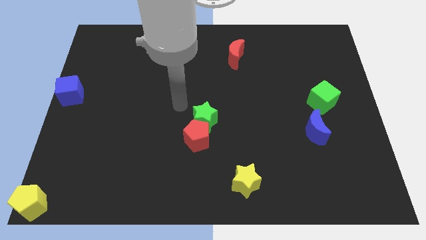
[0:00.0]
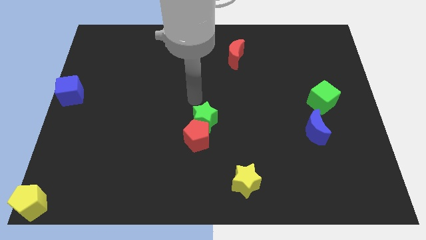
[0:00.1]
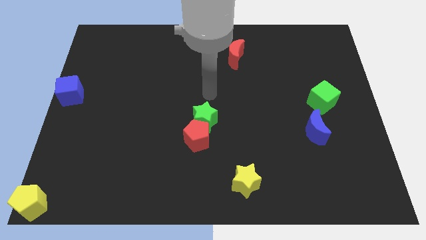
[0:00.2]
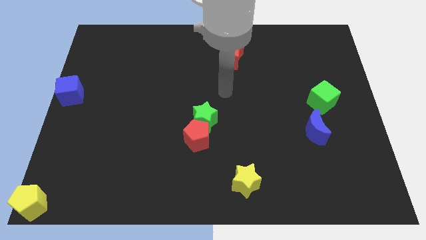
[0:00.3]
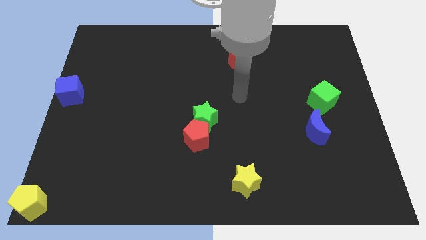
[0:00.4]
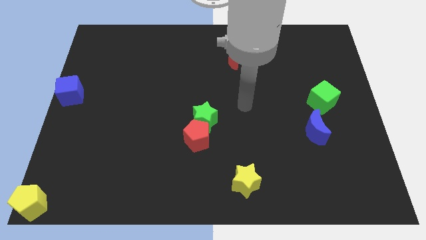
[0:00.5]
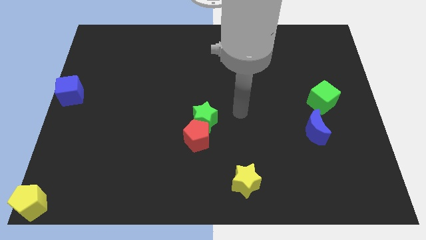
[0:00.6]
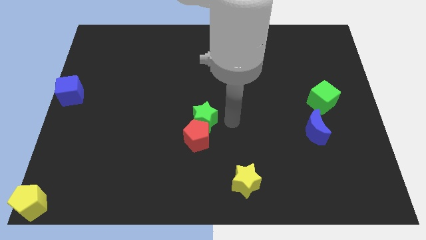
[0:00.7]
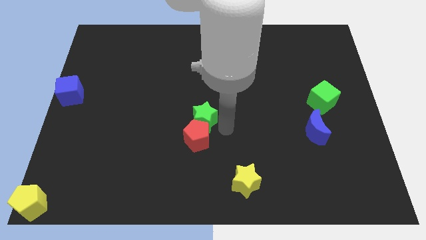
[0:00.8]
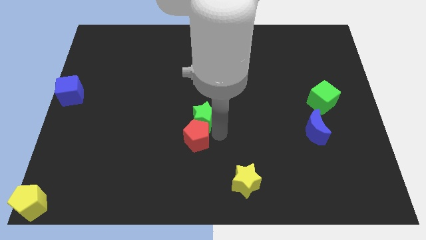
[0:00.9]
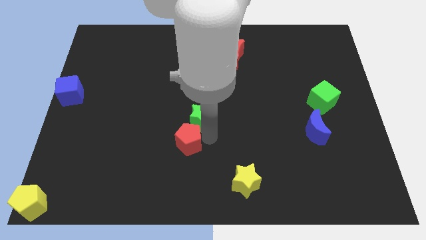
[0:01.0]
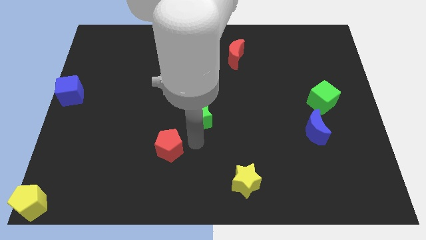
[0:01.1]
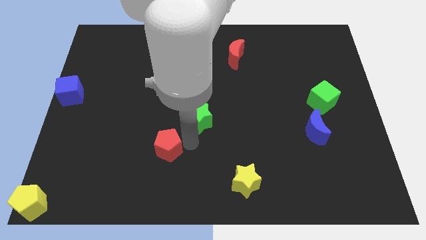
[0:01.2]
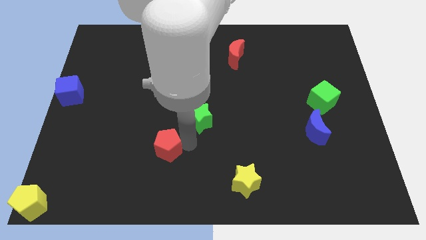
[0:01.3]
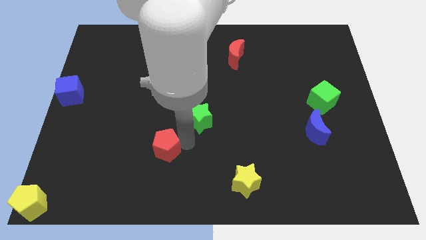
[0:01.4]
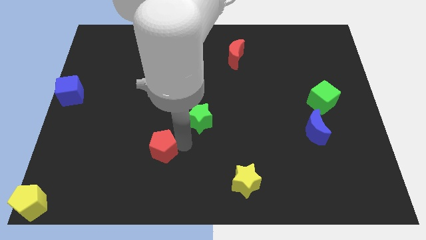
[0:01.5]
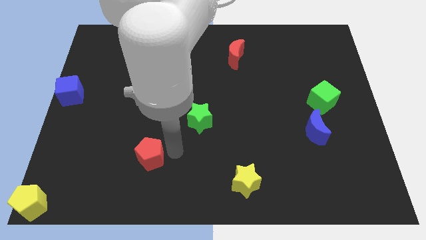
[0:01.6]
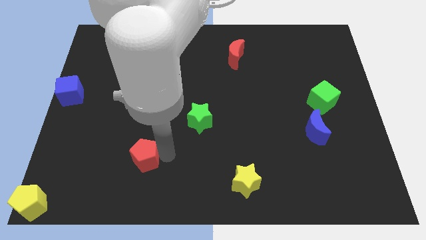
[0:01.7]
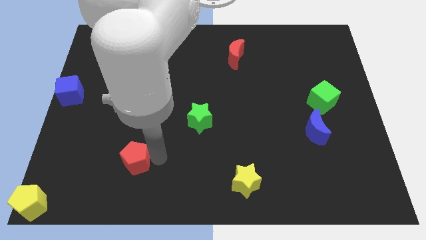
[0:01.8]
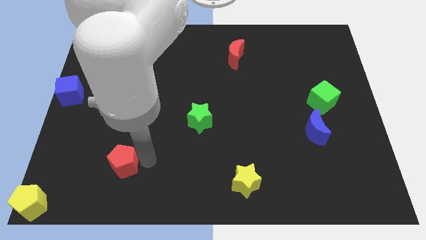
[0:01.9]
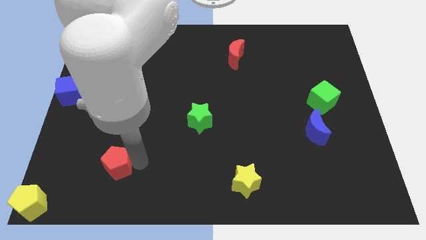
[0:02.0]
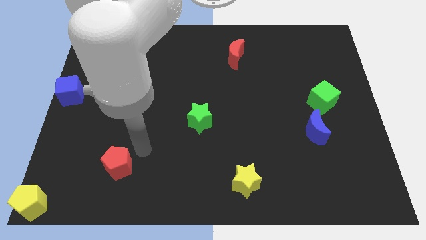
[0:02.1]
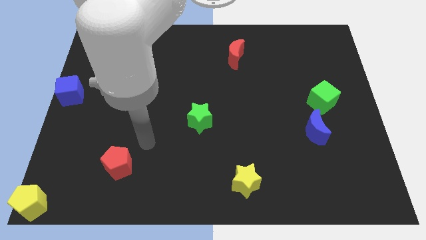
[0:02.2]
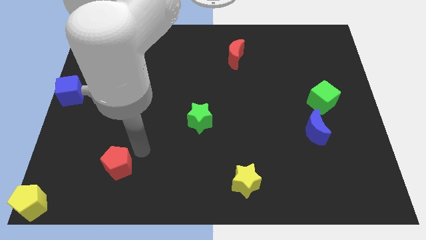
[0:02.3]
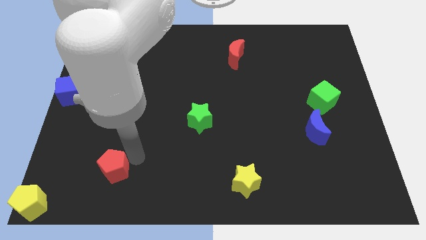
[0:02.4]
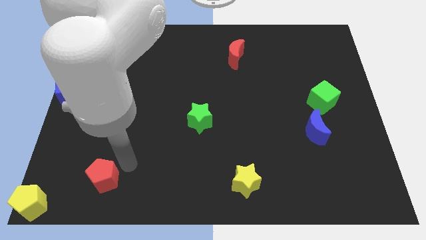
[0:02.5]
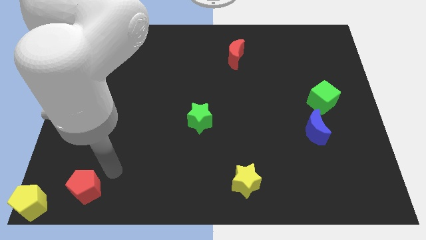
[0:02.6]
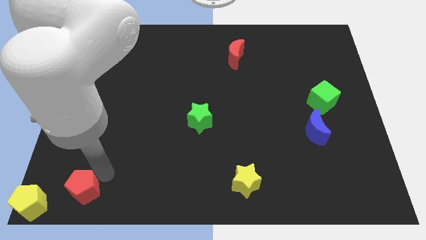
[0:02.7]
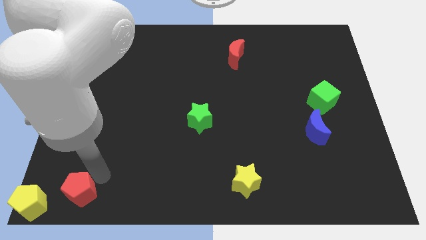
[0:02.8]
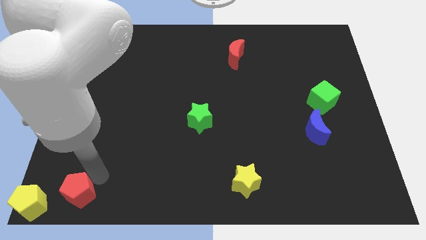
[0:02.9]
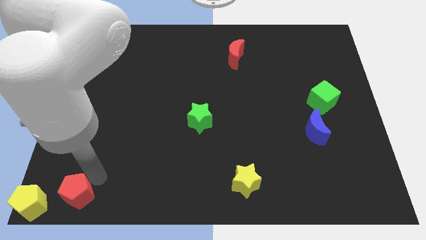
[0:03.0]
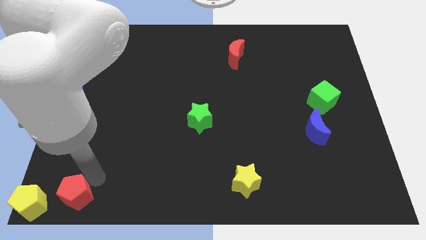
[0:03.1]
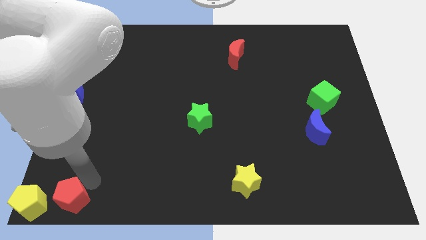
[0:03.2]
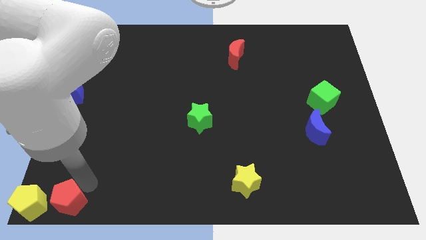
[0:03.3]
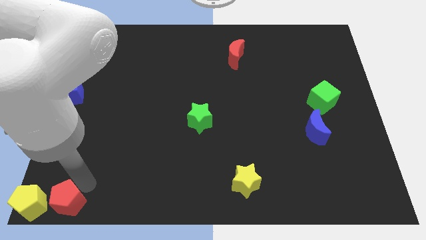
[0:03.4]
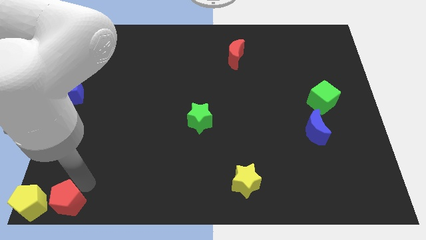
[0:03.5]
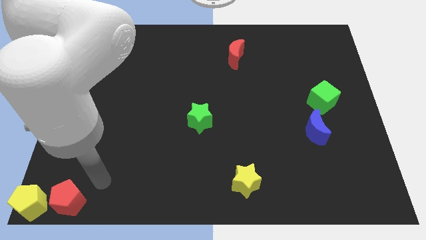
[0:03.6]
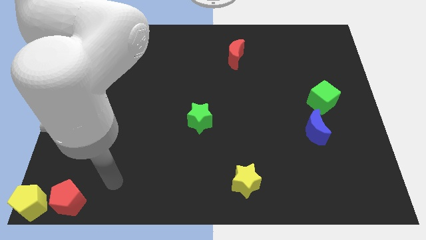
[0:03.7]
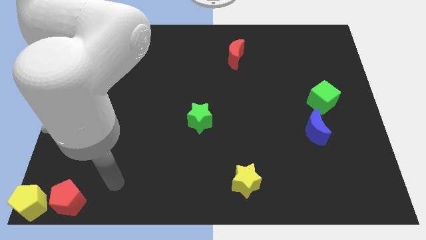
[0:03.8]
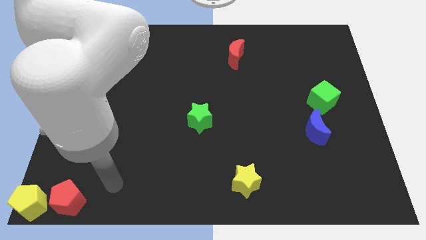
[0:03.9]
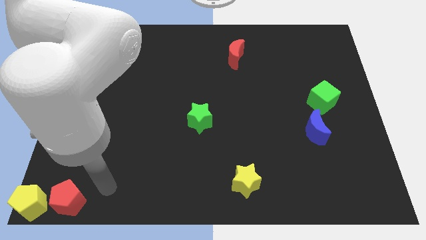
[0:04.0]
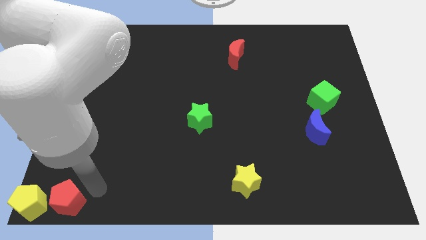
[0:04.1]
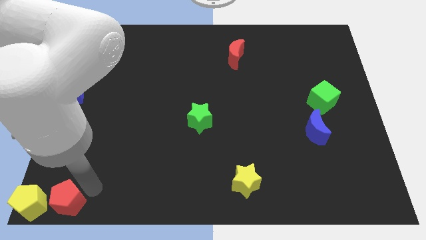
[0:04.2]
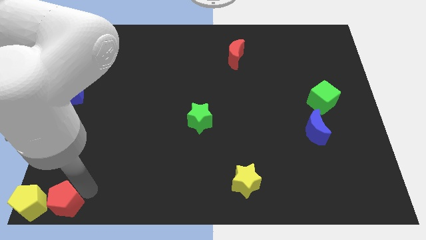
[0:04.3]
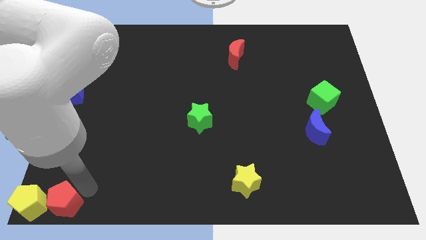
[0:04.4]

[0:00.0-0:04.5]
push the red pentagon away from the green star

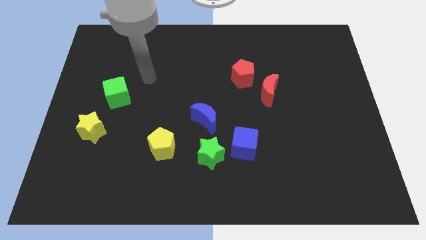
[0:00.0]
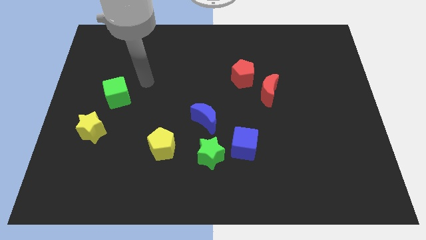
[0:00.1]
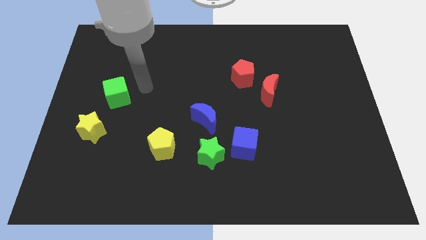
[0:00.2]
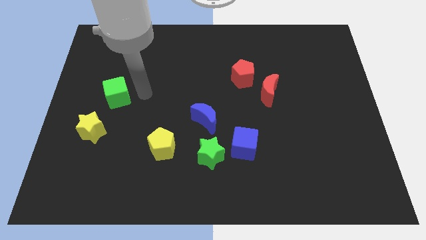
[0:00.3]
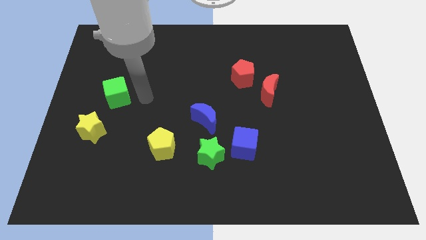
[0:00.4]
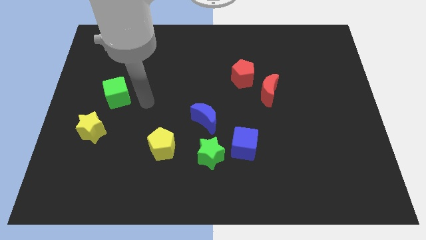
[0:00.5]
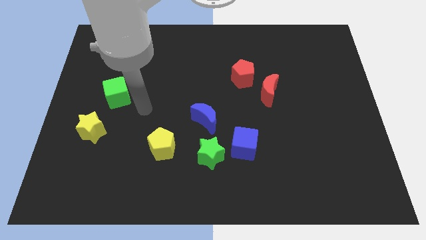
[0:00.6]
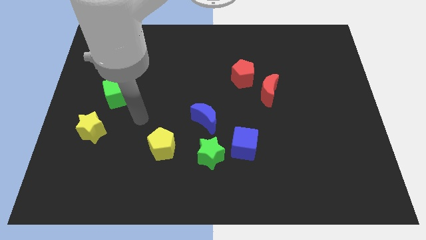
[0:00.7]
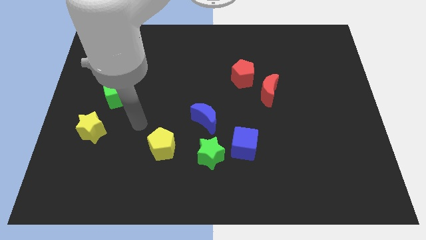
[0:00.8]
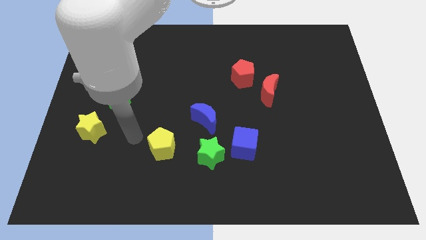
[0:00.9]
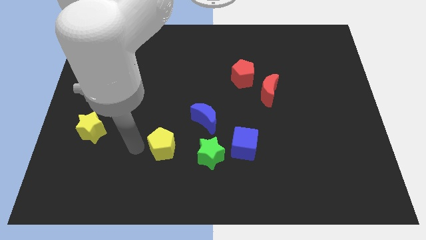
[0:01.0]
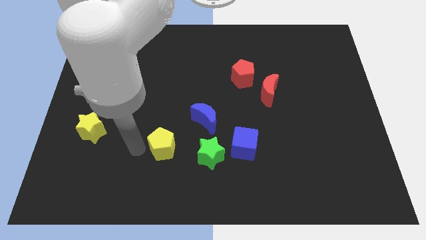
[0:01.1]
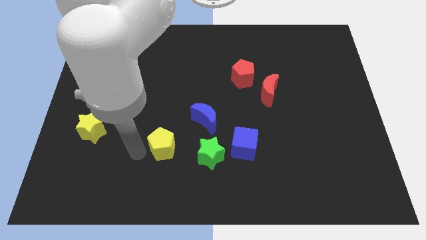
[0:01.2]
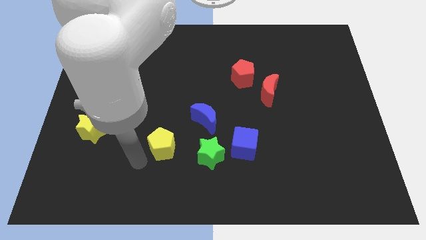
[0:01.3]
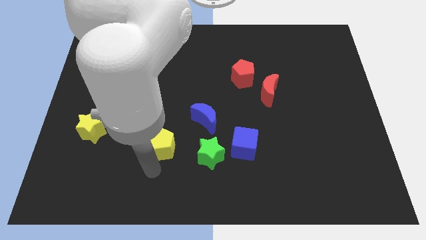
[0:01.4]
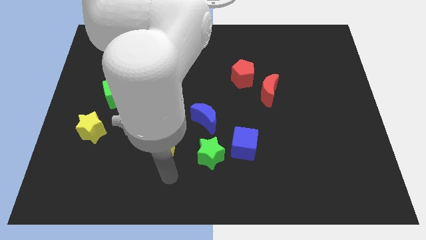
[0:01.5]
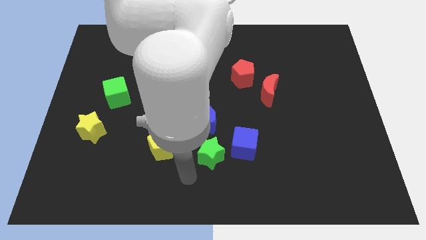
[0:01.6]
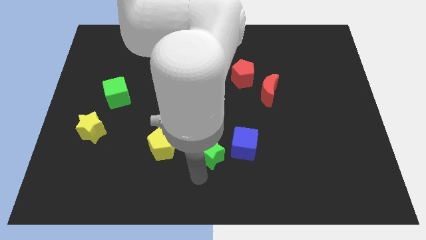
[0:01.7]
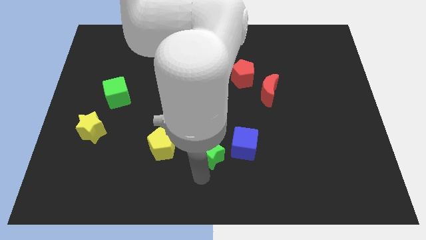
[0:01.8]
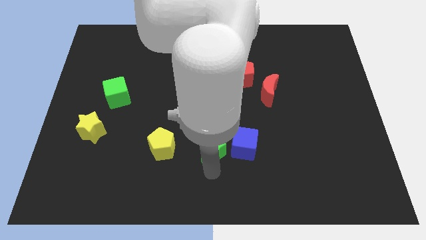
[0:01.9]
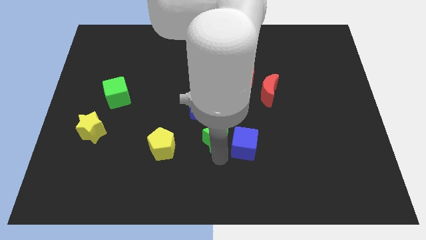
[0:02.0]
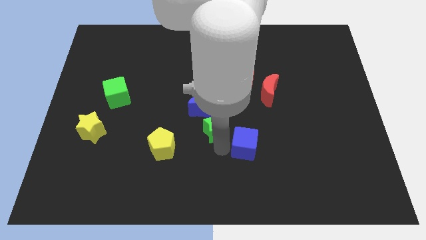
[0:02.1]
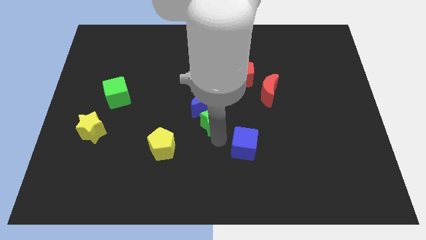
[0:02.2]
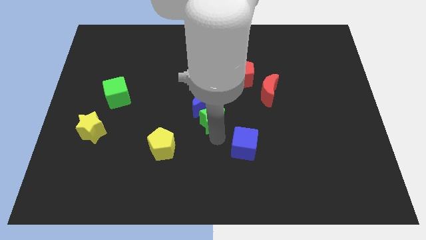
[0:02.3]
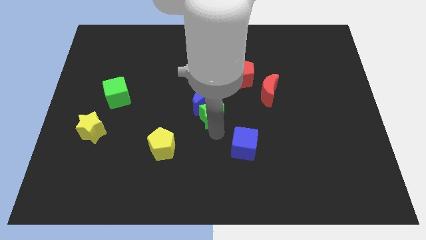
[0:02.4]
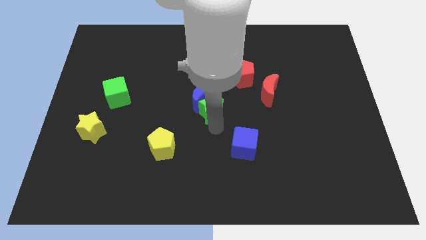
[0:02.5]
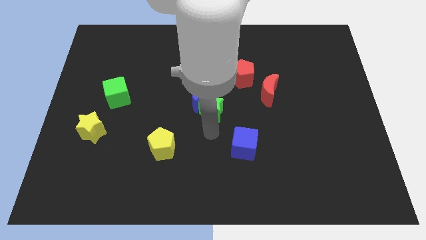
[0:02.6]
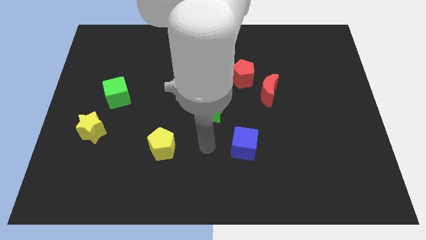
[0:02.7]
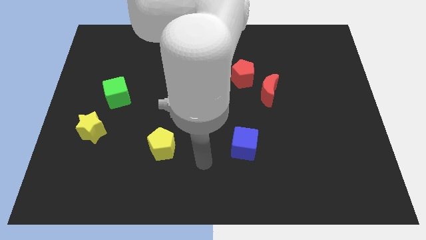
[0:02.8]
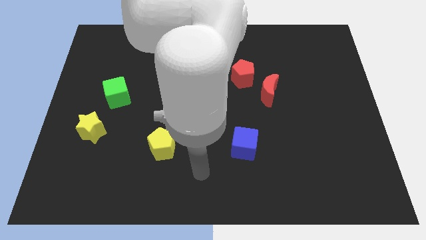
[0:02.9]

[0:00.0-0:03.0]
push the green star into the blue moon

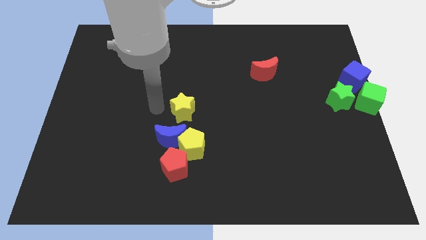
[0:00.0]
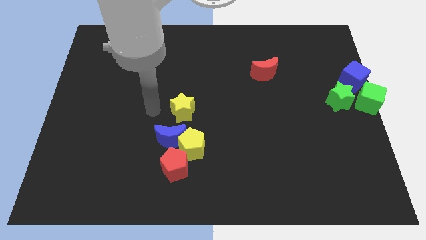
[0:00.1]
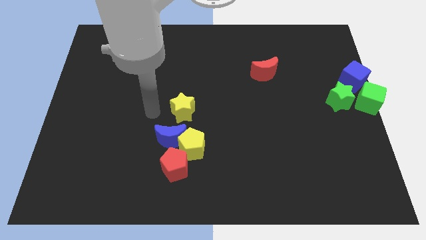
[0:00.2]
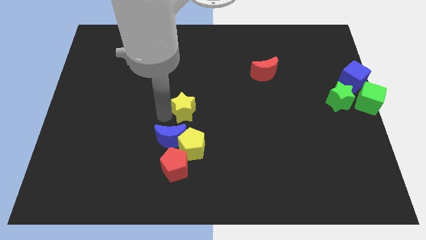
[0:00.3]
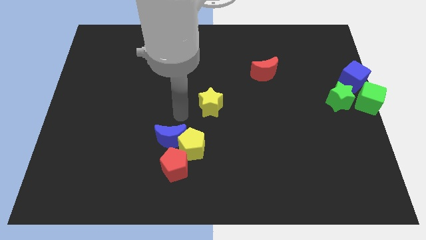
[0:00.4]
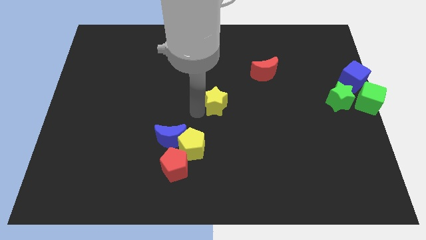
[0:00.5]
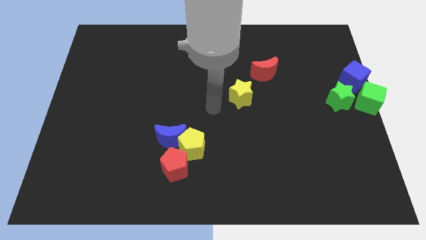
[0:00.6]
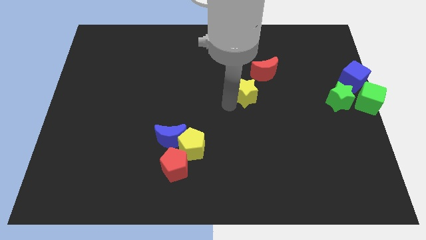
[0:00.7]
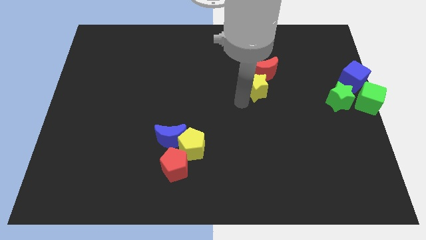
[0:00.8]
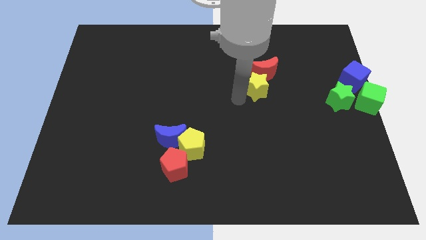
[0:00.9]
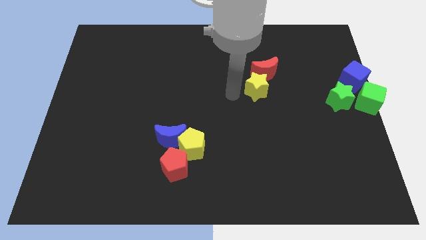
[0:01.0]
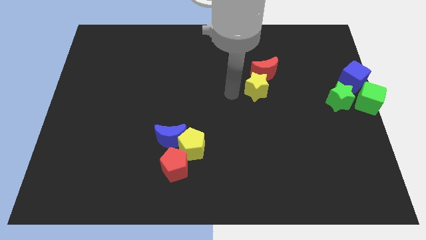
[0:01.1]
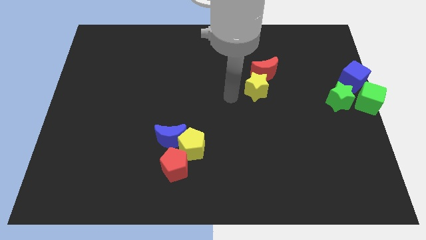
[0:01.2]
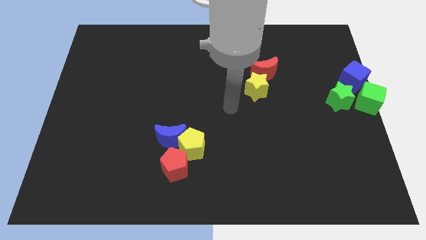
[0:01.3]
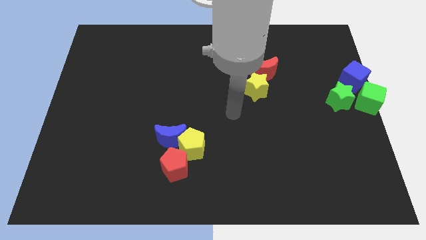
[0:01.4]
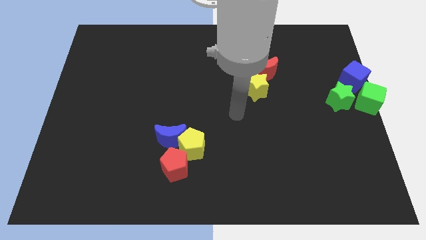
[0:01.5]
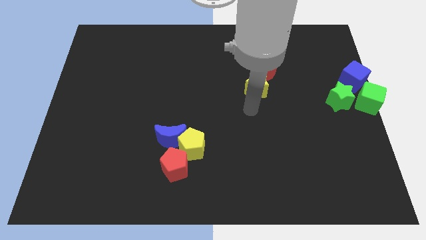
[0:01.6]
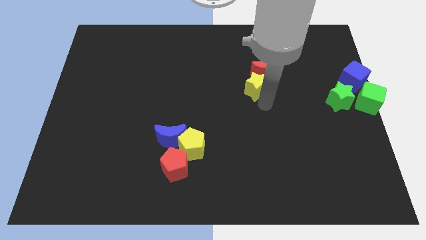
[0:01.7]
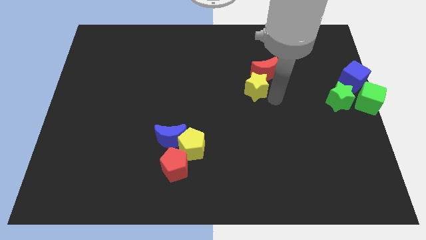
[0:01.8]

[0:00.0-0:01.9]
move the yellow star below the red crescent
